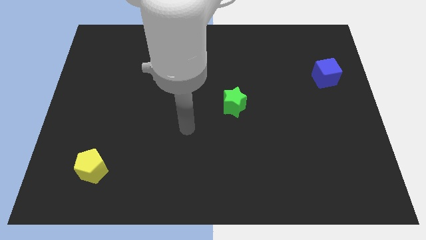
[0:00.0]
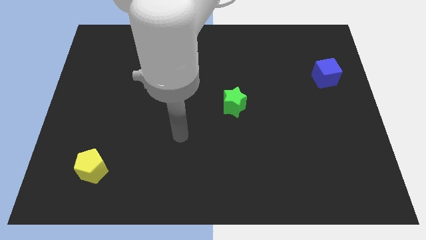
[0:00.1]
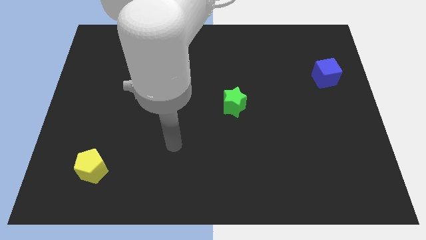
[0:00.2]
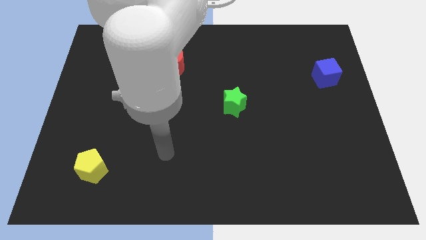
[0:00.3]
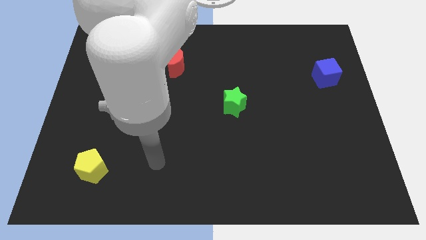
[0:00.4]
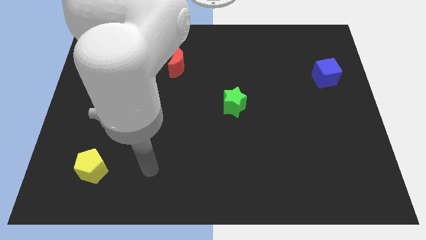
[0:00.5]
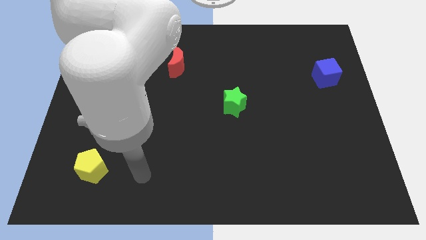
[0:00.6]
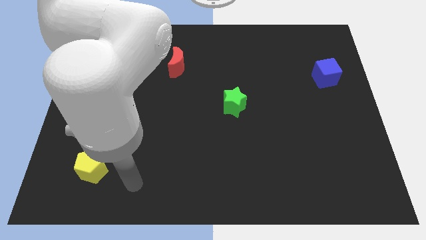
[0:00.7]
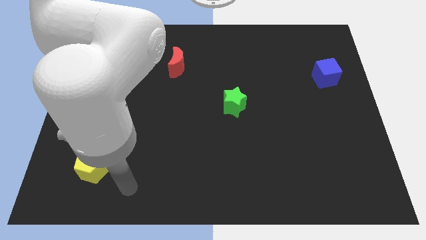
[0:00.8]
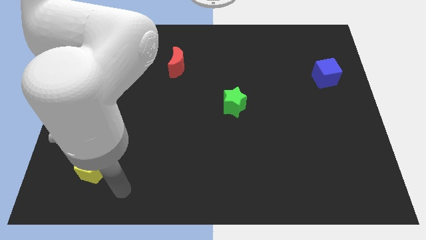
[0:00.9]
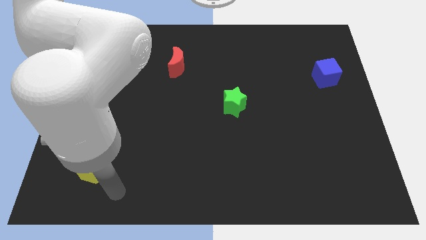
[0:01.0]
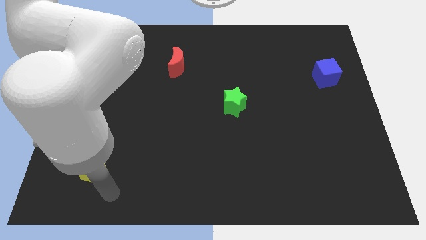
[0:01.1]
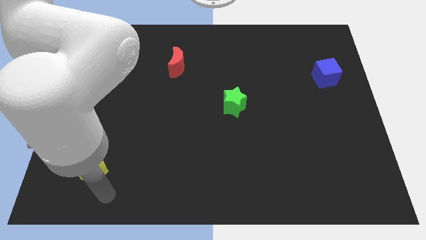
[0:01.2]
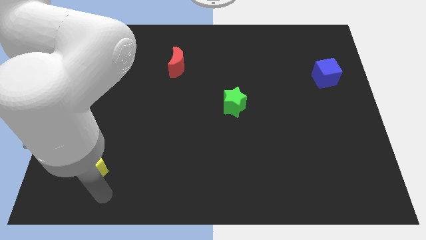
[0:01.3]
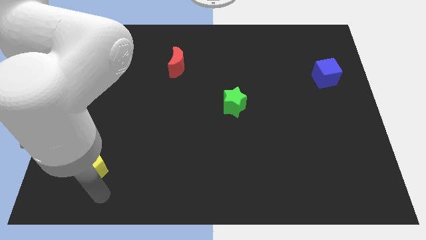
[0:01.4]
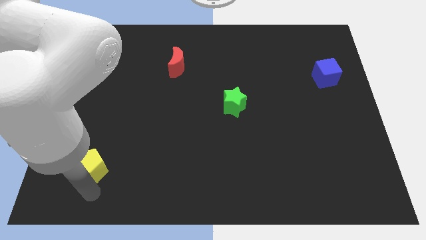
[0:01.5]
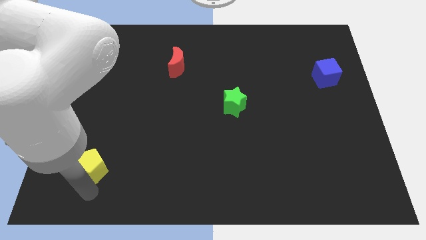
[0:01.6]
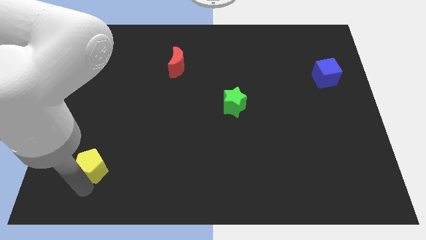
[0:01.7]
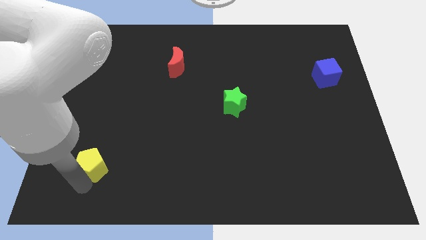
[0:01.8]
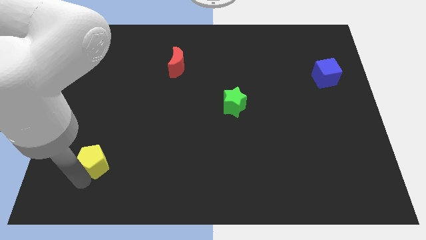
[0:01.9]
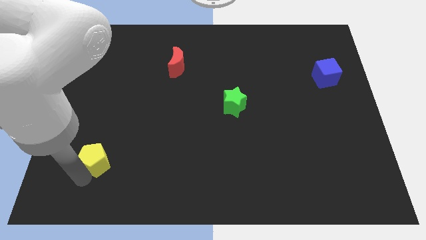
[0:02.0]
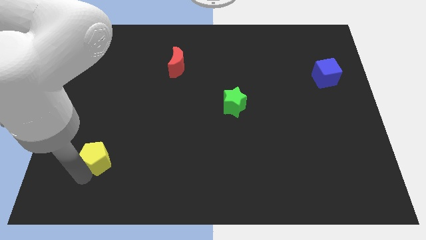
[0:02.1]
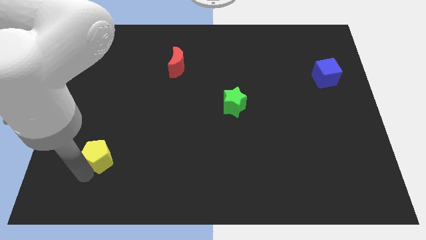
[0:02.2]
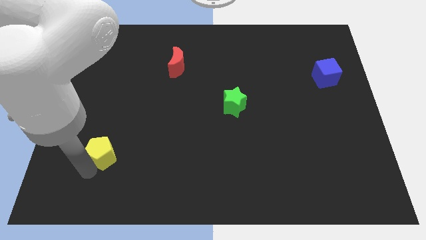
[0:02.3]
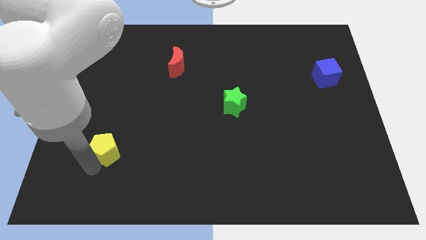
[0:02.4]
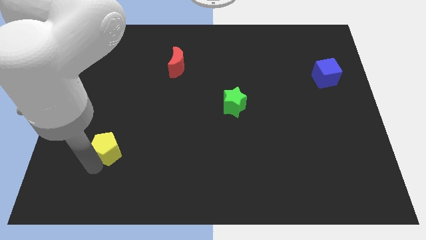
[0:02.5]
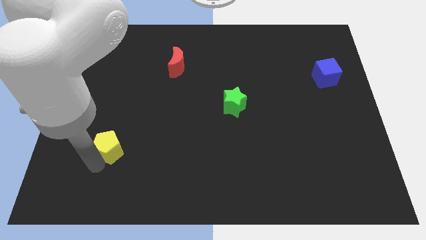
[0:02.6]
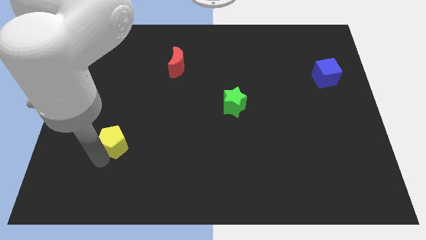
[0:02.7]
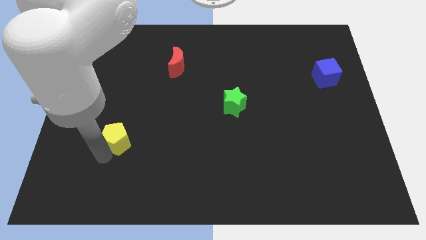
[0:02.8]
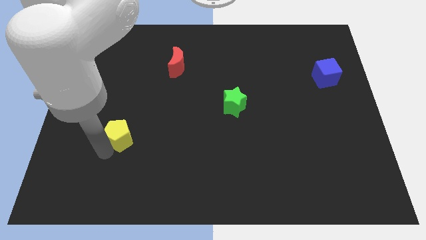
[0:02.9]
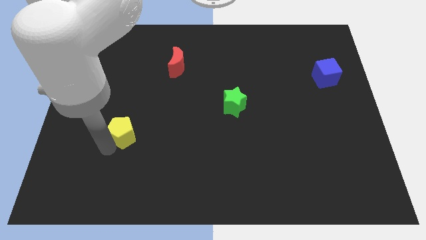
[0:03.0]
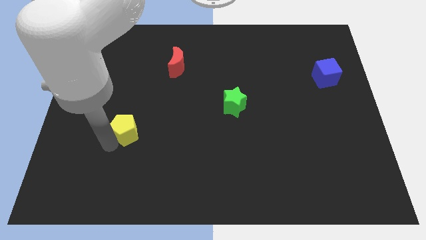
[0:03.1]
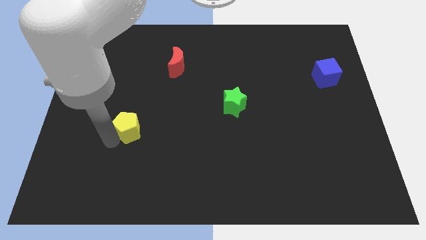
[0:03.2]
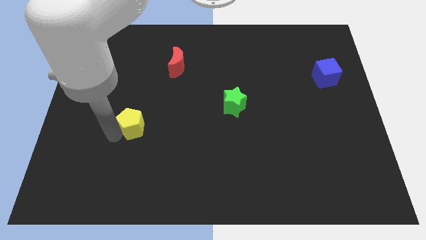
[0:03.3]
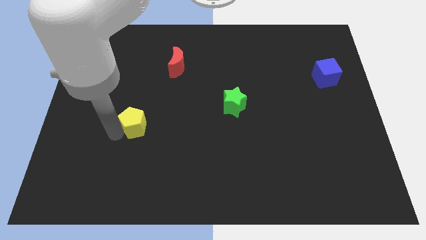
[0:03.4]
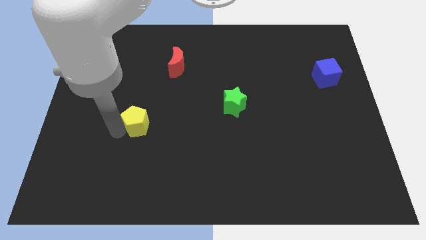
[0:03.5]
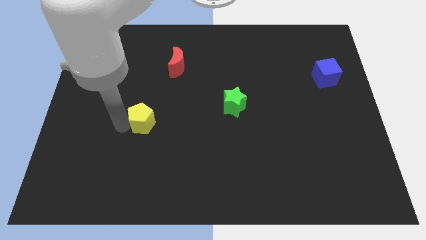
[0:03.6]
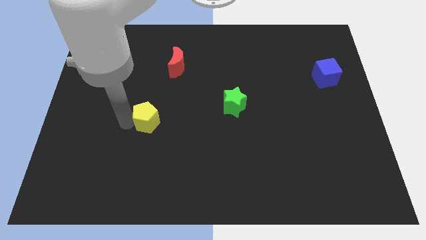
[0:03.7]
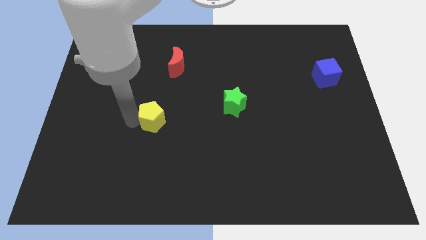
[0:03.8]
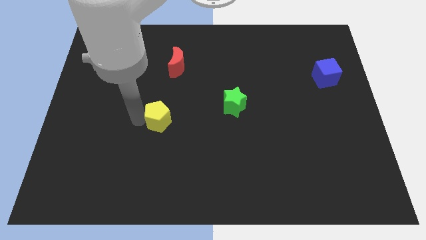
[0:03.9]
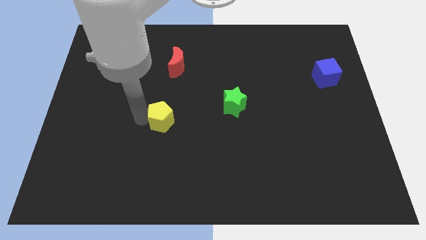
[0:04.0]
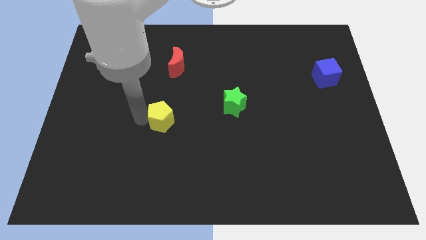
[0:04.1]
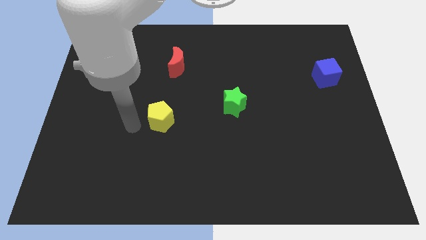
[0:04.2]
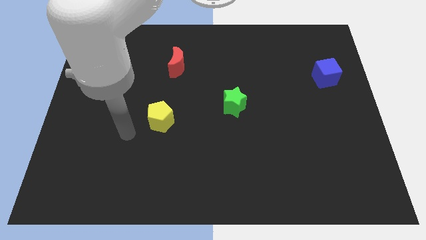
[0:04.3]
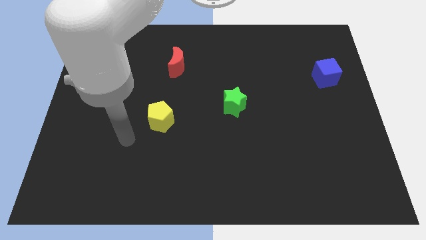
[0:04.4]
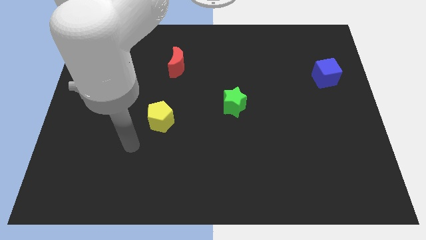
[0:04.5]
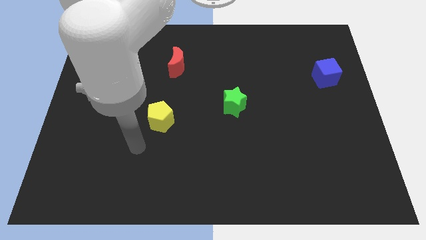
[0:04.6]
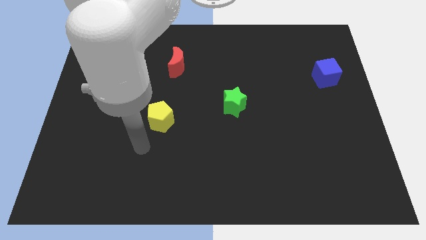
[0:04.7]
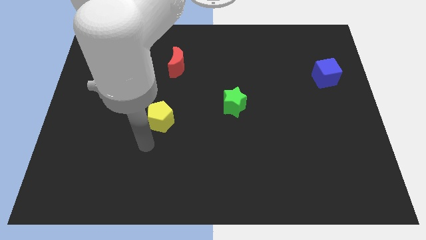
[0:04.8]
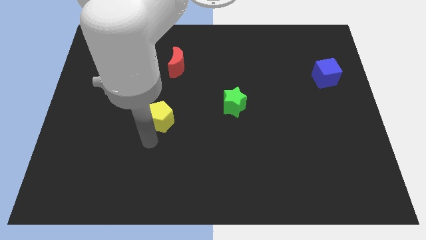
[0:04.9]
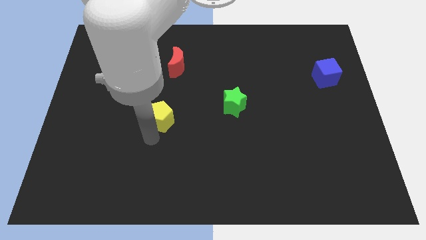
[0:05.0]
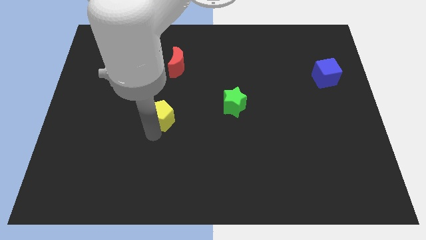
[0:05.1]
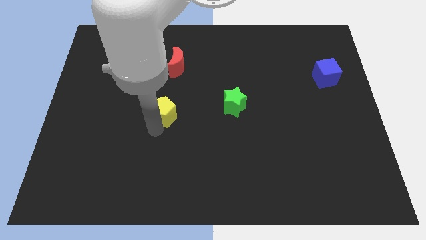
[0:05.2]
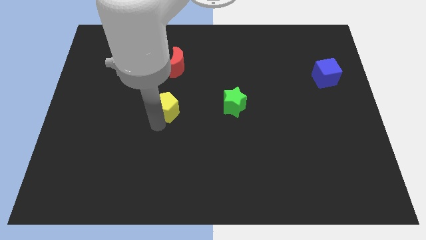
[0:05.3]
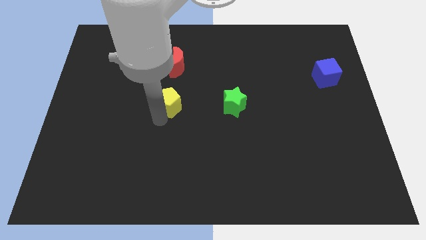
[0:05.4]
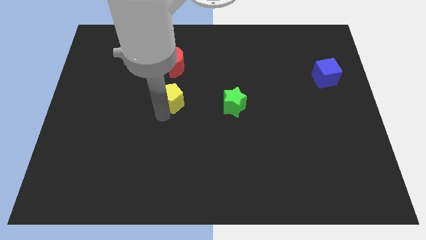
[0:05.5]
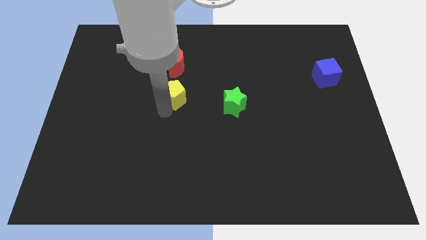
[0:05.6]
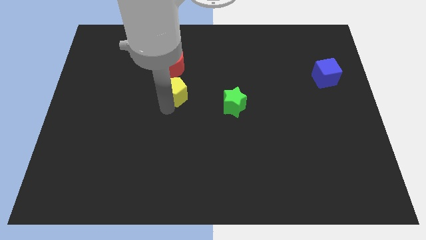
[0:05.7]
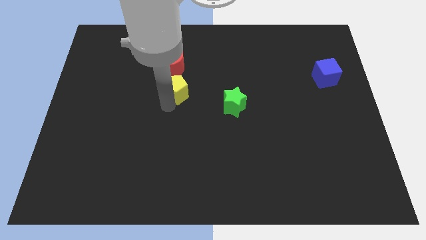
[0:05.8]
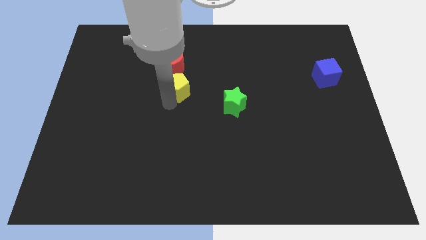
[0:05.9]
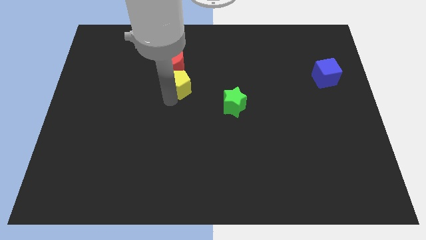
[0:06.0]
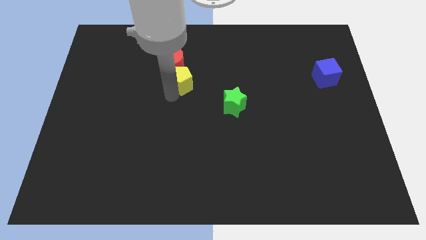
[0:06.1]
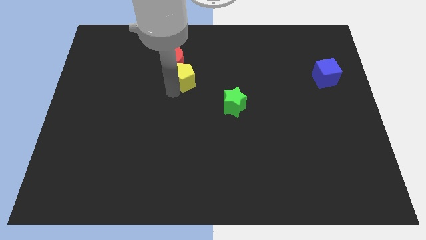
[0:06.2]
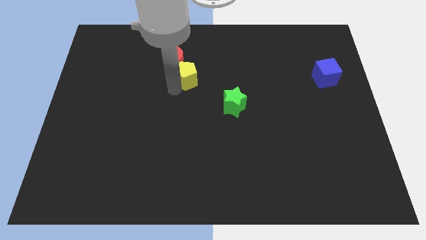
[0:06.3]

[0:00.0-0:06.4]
move the pentagon towards the red block

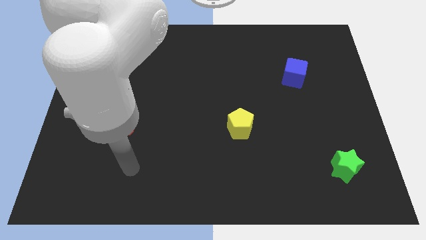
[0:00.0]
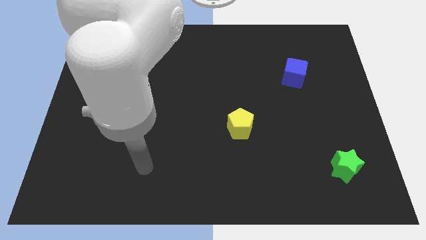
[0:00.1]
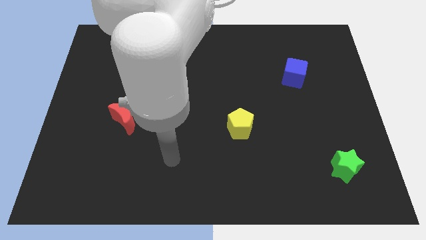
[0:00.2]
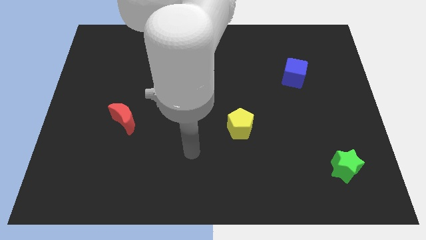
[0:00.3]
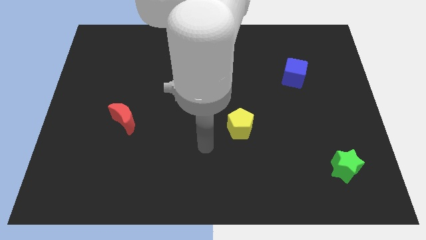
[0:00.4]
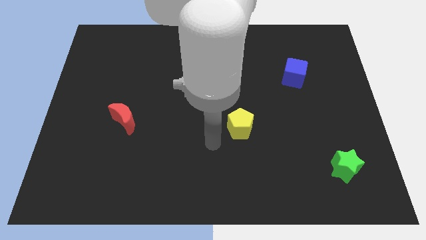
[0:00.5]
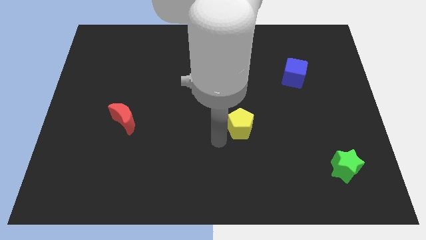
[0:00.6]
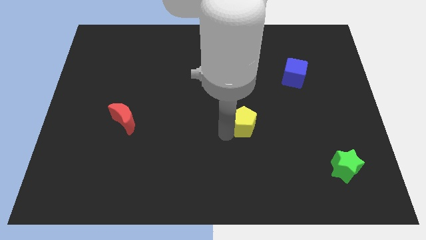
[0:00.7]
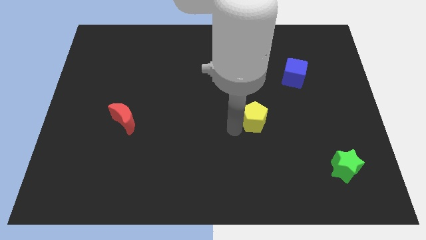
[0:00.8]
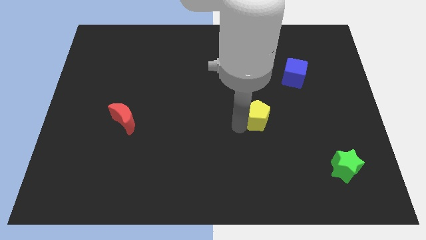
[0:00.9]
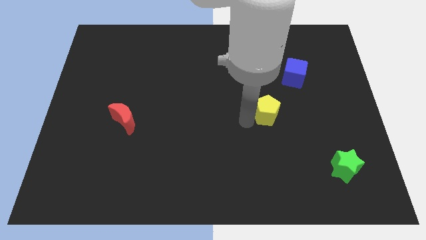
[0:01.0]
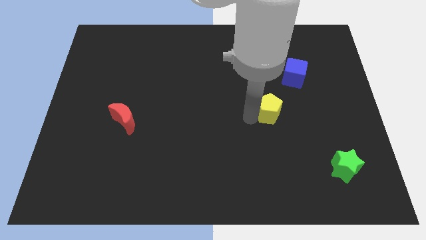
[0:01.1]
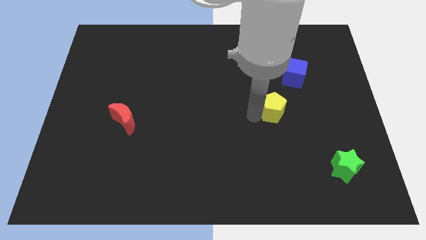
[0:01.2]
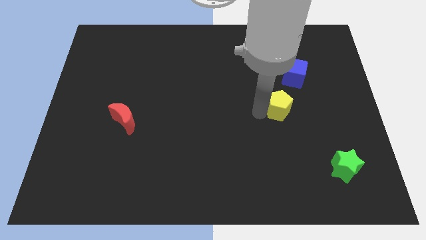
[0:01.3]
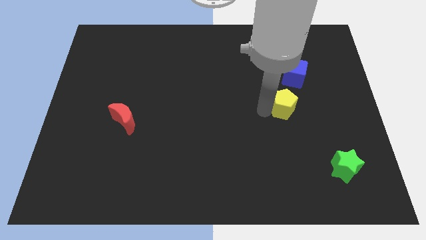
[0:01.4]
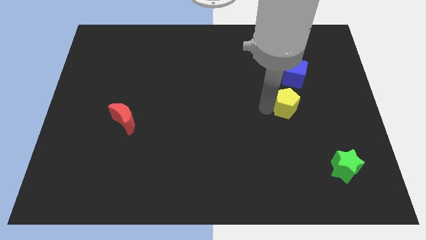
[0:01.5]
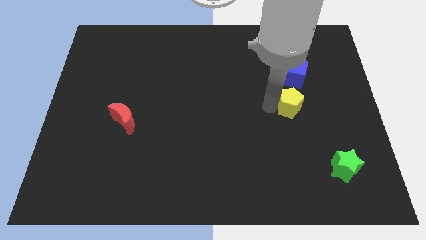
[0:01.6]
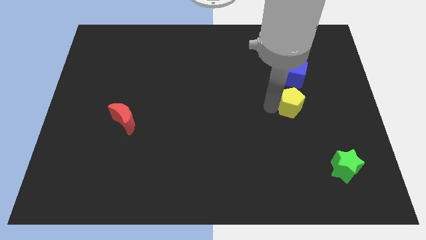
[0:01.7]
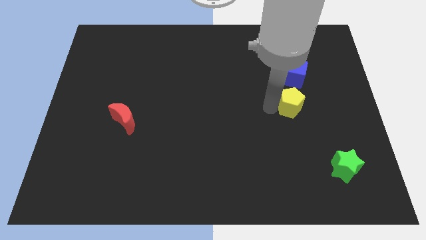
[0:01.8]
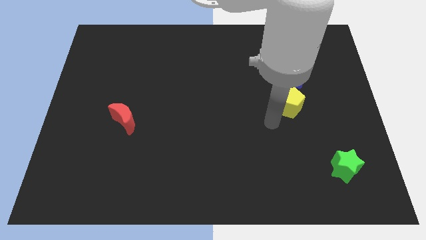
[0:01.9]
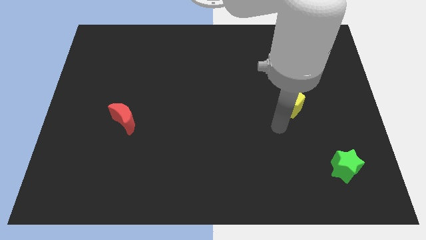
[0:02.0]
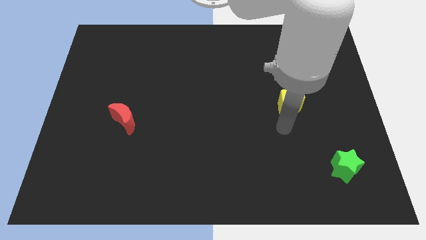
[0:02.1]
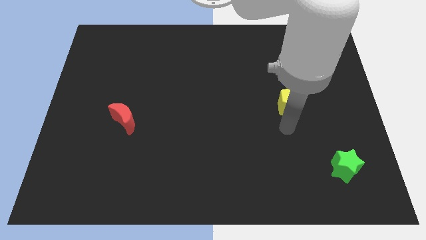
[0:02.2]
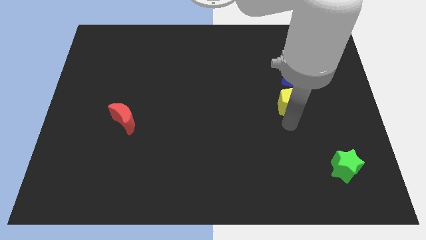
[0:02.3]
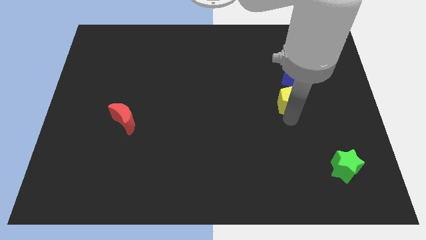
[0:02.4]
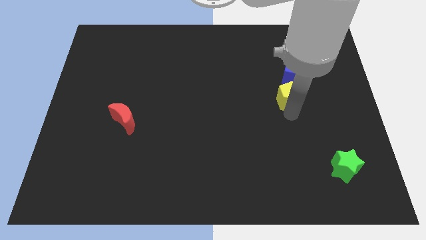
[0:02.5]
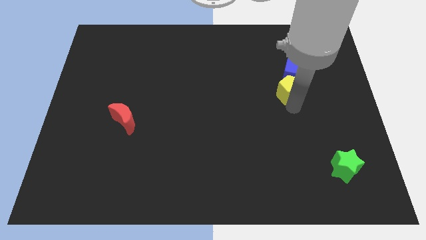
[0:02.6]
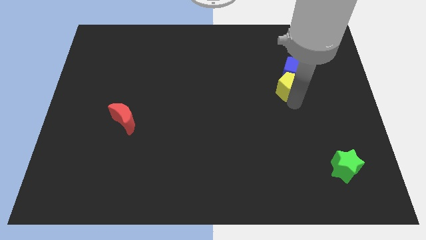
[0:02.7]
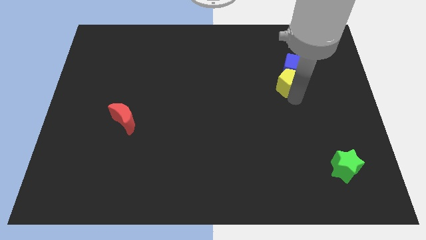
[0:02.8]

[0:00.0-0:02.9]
put the pentagon to the cube
